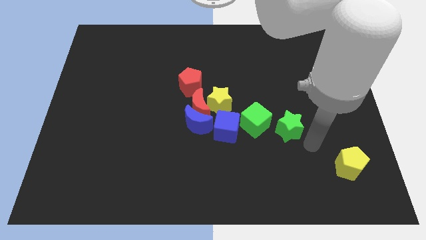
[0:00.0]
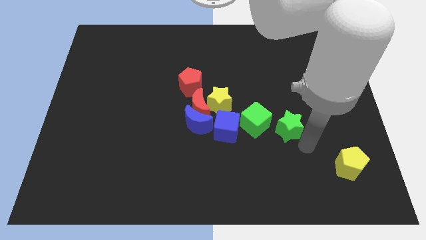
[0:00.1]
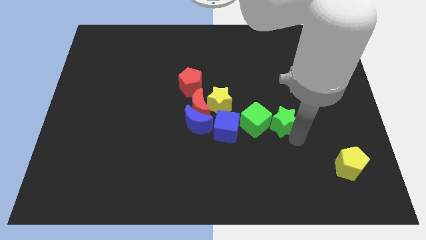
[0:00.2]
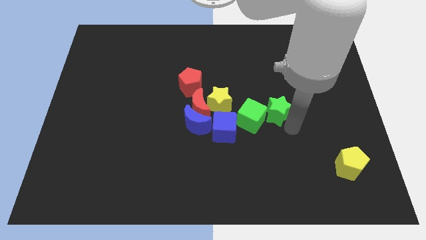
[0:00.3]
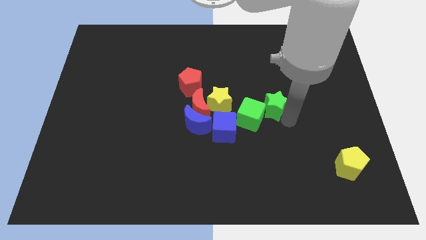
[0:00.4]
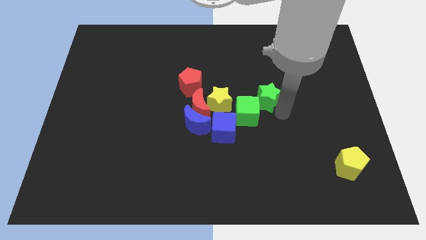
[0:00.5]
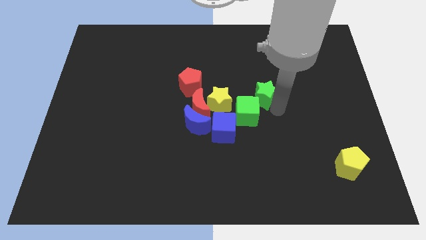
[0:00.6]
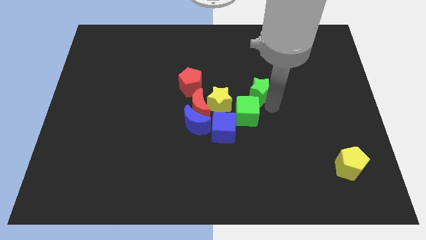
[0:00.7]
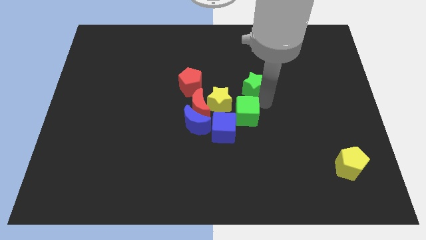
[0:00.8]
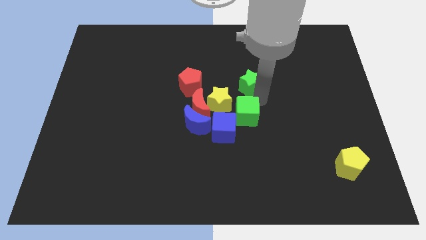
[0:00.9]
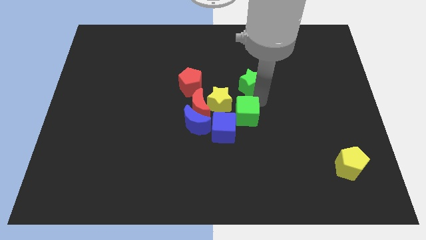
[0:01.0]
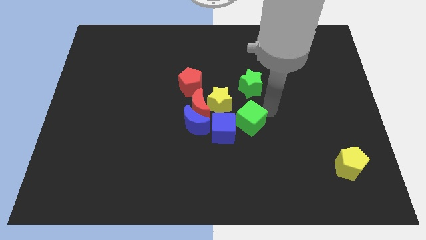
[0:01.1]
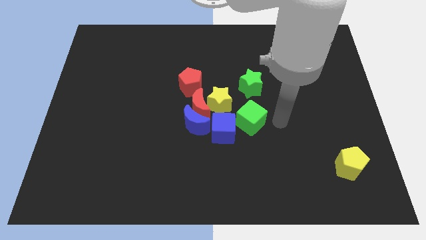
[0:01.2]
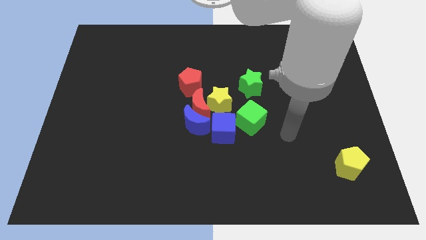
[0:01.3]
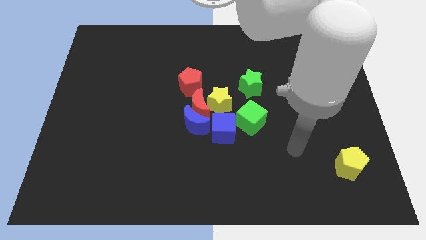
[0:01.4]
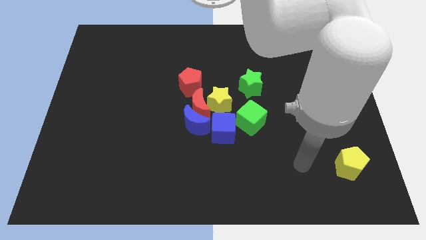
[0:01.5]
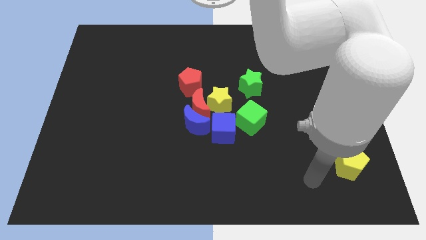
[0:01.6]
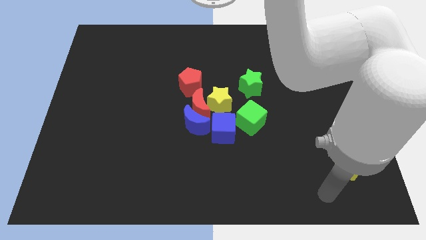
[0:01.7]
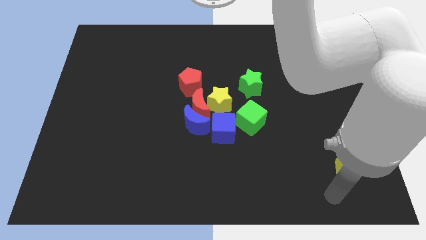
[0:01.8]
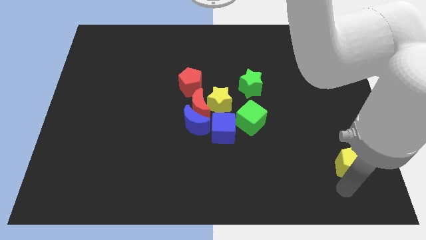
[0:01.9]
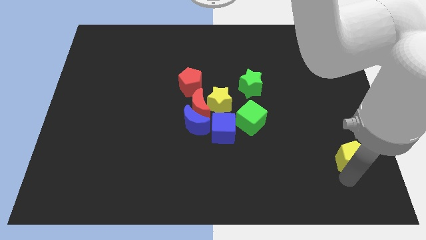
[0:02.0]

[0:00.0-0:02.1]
place green star above the green cube

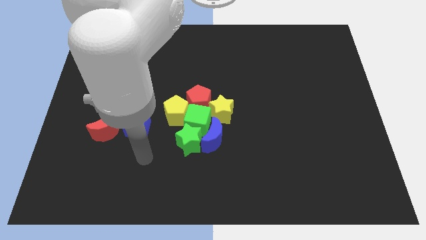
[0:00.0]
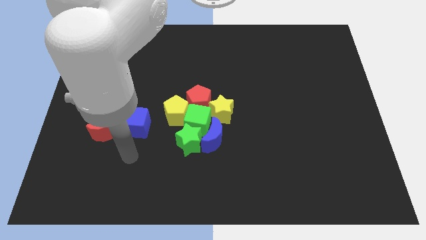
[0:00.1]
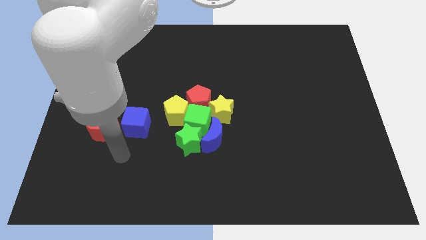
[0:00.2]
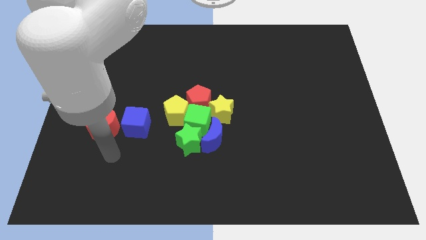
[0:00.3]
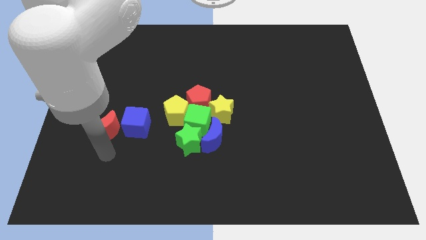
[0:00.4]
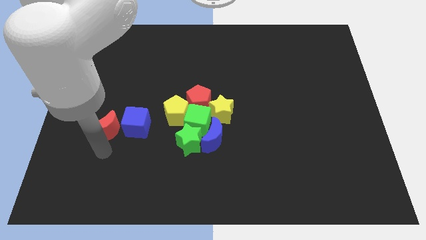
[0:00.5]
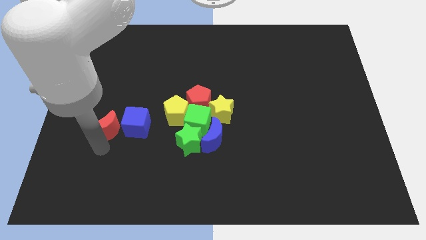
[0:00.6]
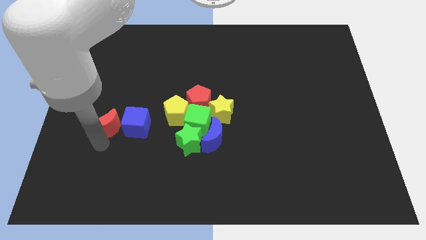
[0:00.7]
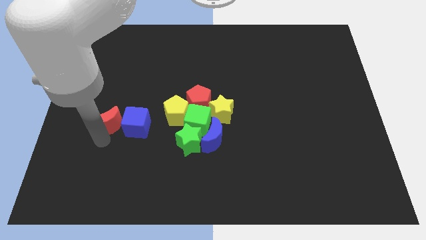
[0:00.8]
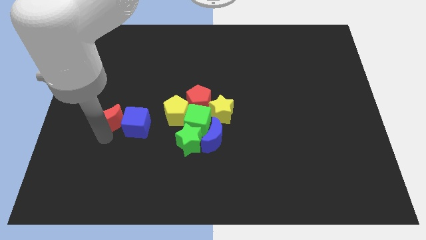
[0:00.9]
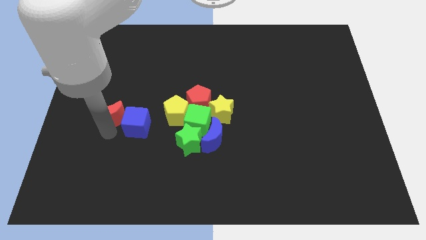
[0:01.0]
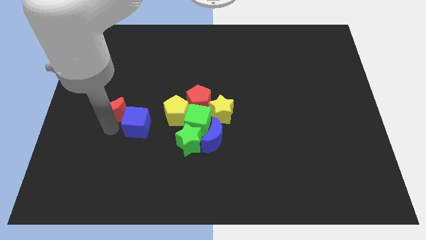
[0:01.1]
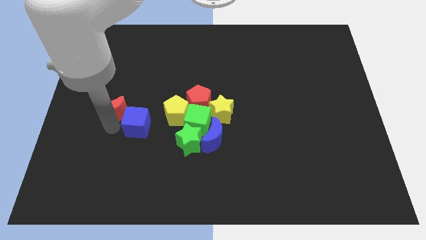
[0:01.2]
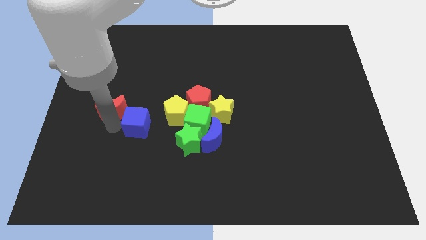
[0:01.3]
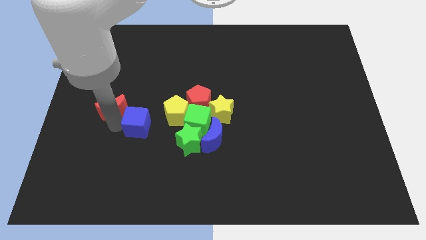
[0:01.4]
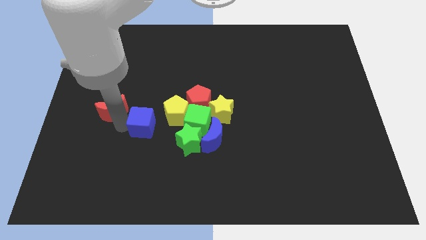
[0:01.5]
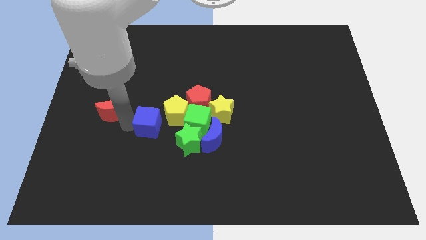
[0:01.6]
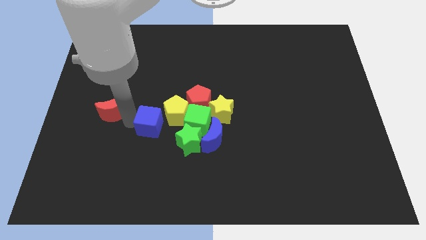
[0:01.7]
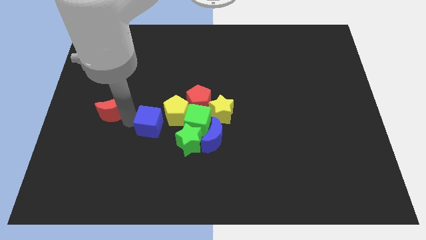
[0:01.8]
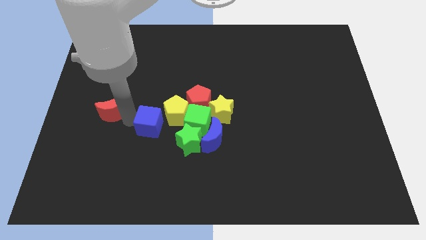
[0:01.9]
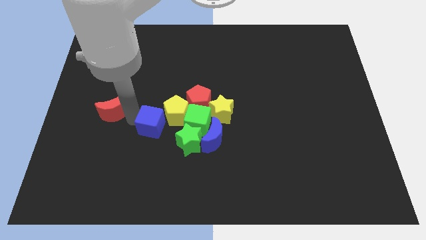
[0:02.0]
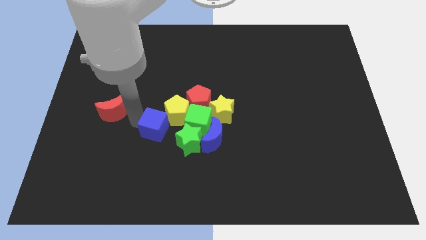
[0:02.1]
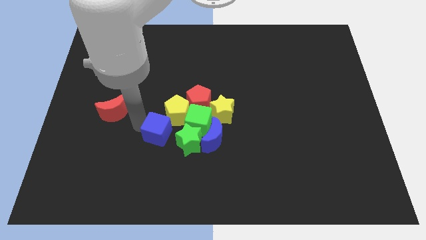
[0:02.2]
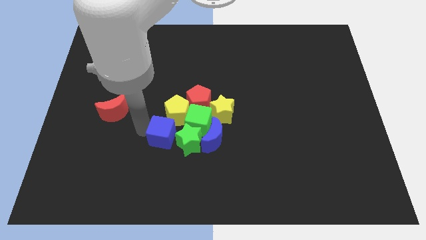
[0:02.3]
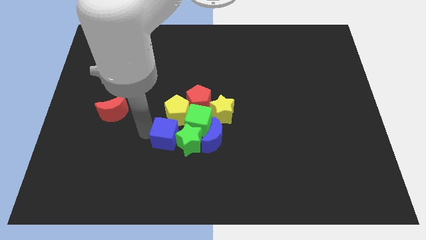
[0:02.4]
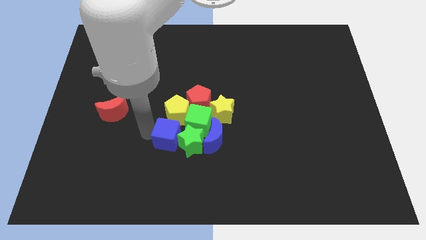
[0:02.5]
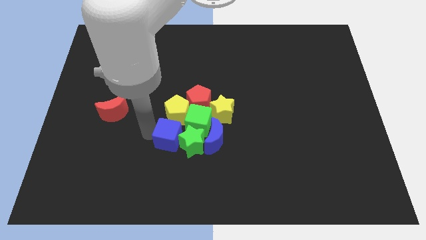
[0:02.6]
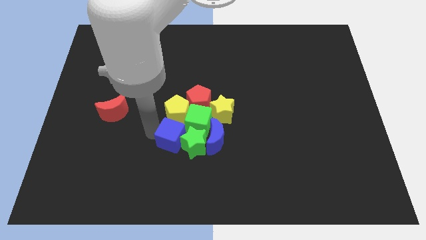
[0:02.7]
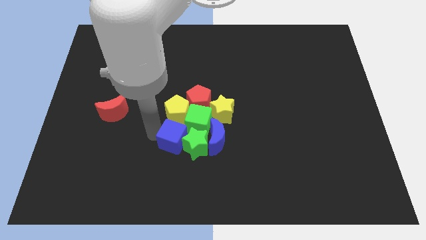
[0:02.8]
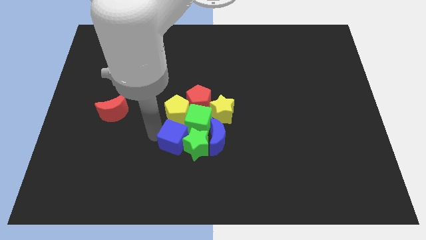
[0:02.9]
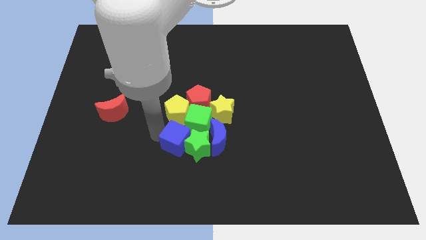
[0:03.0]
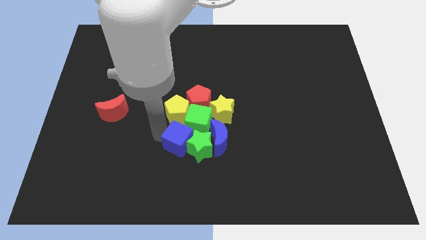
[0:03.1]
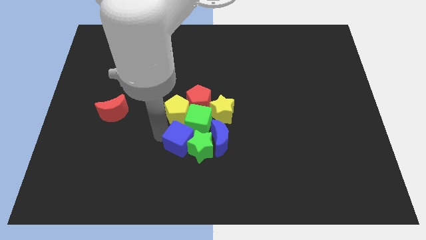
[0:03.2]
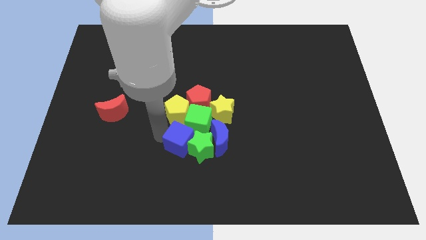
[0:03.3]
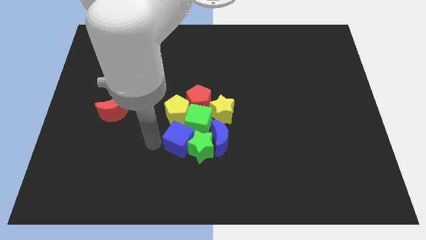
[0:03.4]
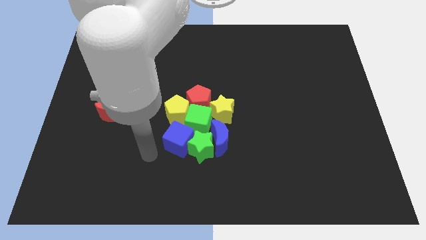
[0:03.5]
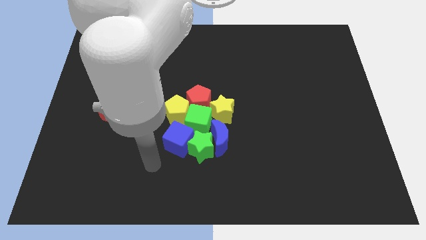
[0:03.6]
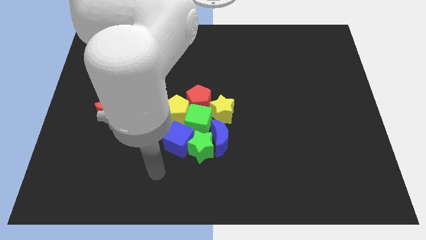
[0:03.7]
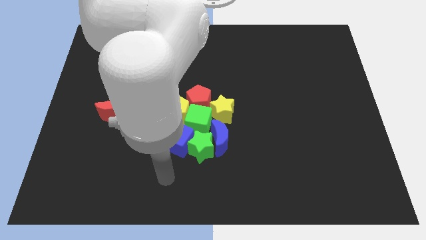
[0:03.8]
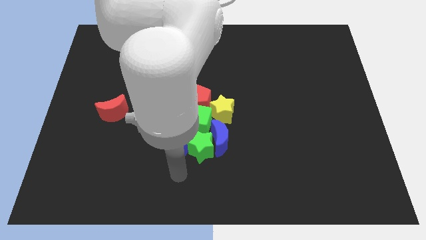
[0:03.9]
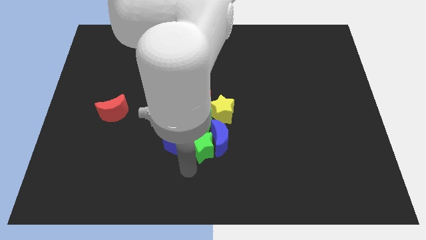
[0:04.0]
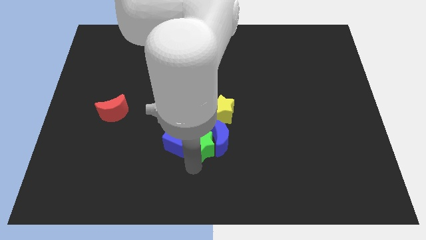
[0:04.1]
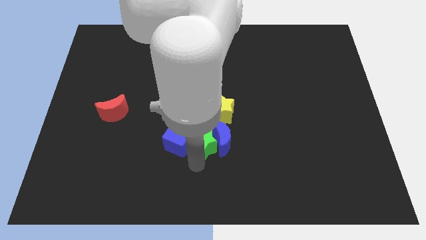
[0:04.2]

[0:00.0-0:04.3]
push the blue cube into the group of blocks

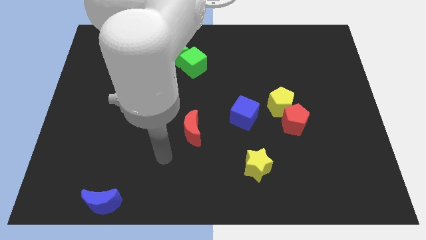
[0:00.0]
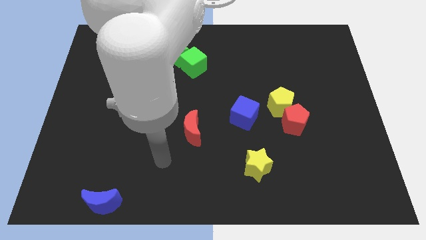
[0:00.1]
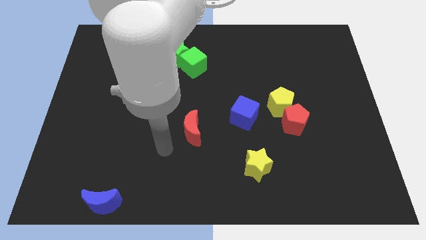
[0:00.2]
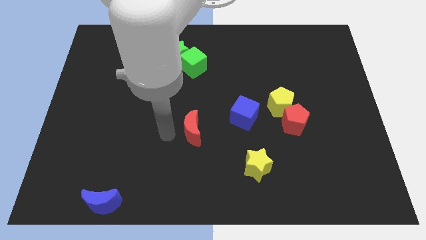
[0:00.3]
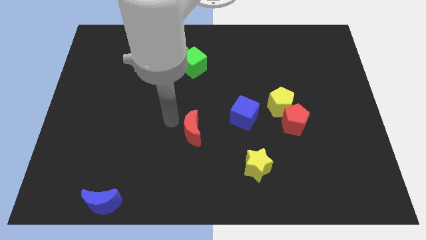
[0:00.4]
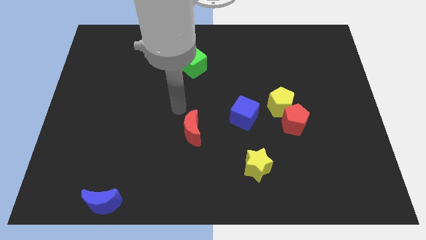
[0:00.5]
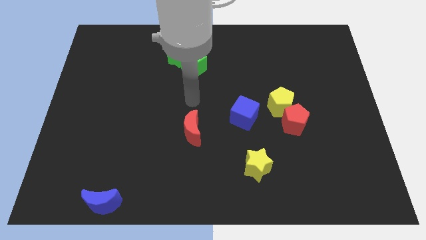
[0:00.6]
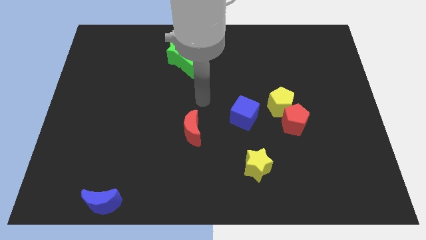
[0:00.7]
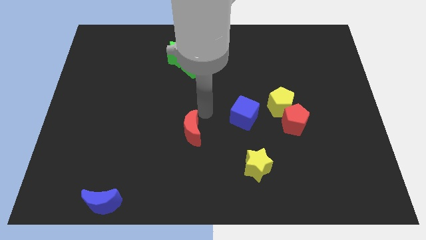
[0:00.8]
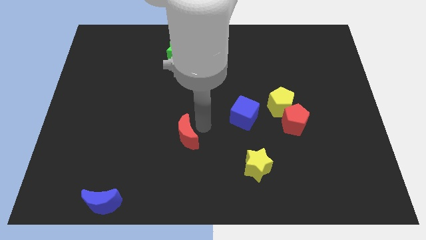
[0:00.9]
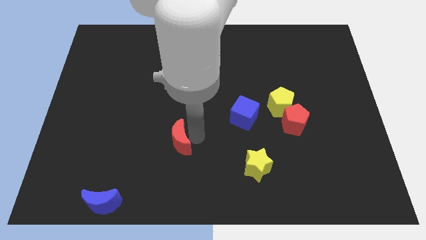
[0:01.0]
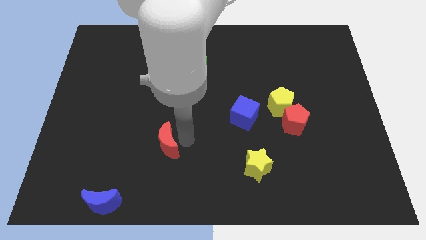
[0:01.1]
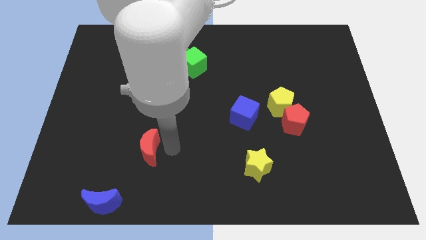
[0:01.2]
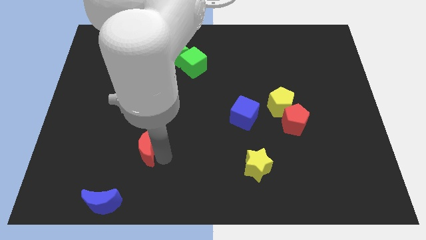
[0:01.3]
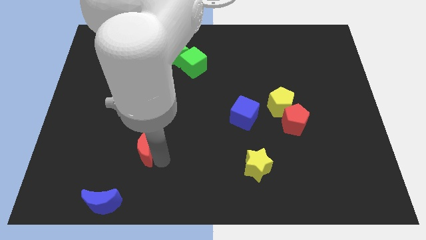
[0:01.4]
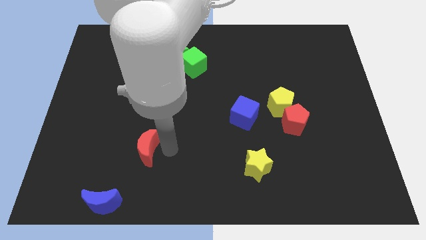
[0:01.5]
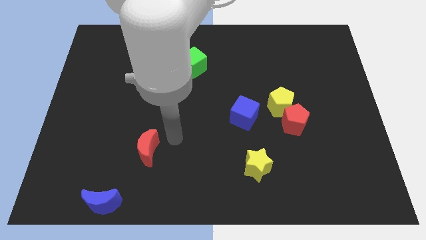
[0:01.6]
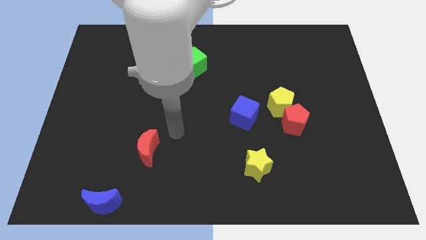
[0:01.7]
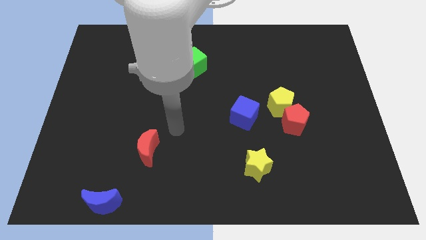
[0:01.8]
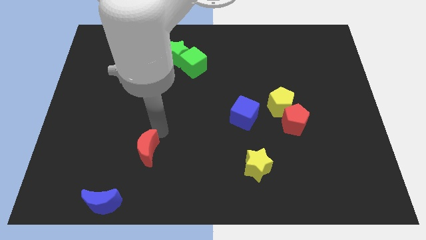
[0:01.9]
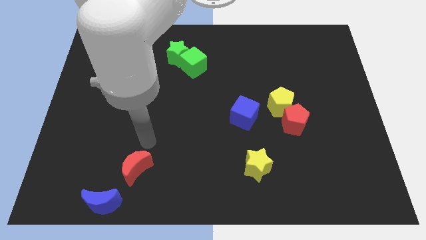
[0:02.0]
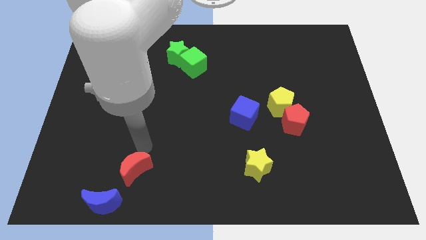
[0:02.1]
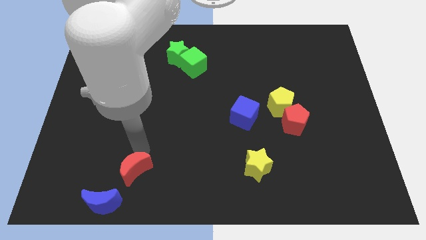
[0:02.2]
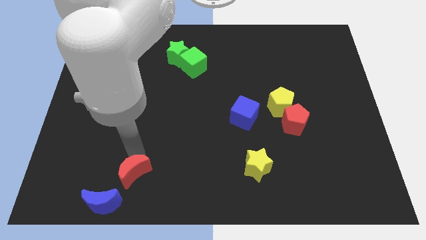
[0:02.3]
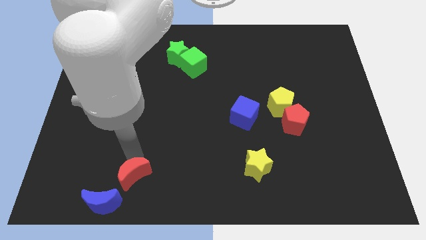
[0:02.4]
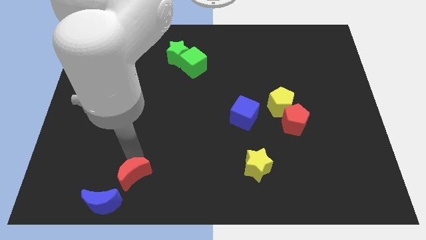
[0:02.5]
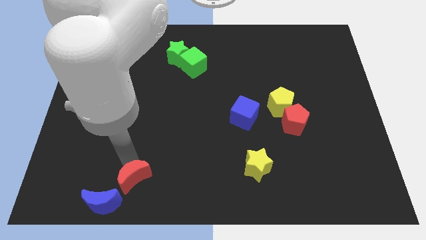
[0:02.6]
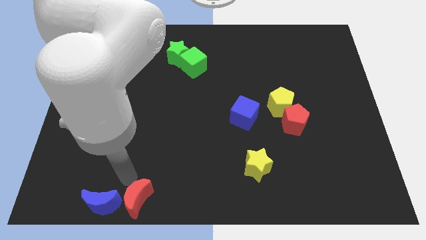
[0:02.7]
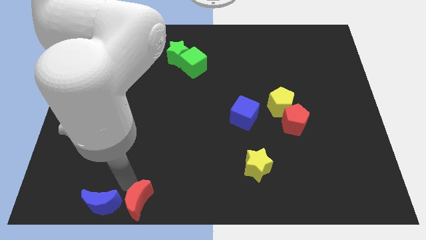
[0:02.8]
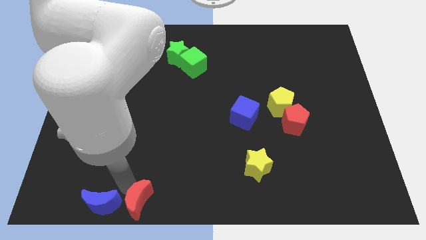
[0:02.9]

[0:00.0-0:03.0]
push the red crescent to the right of the blue crescent
